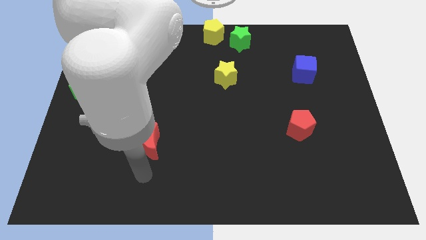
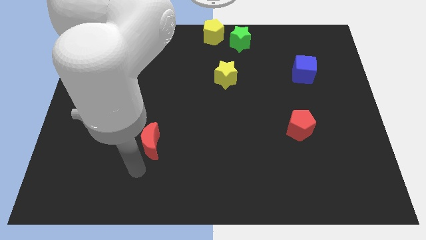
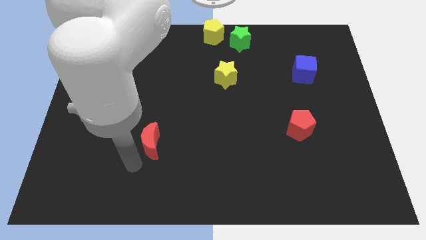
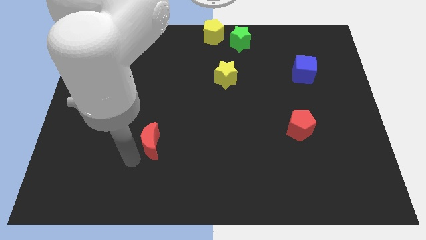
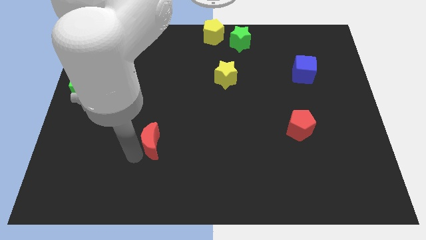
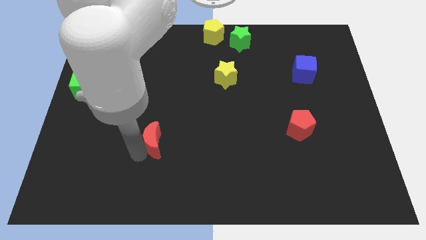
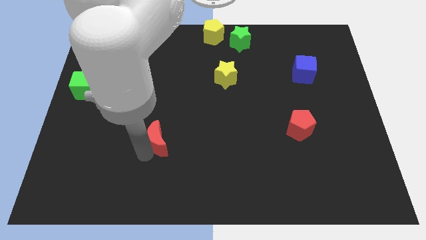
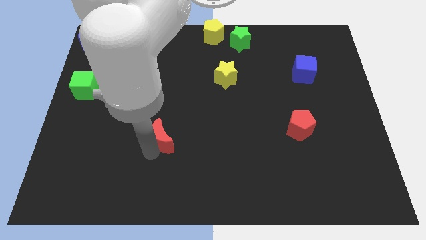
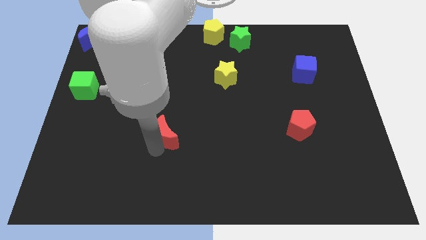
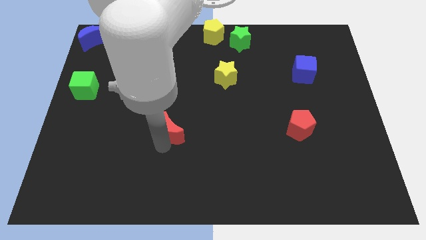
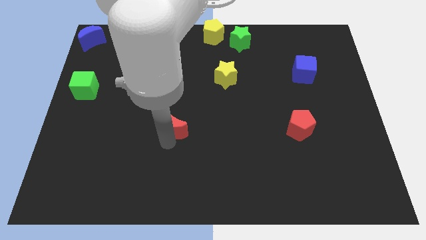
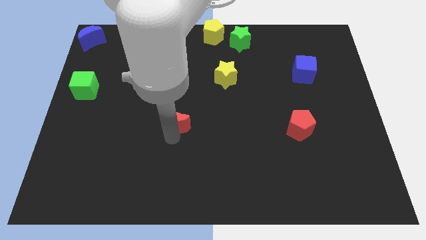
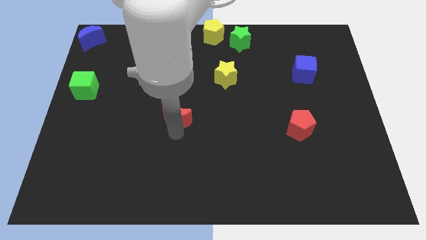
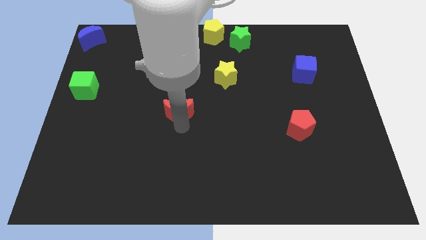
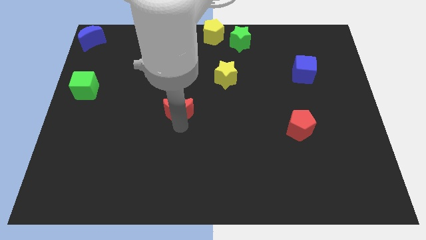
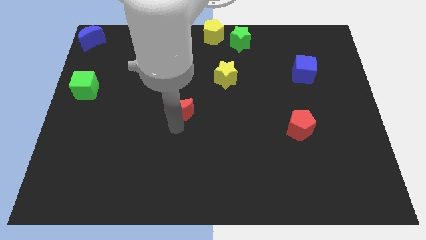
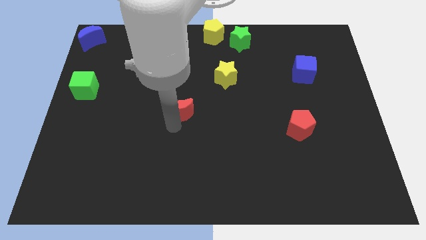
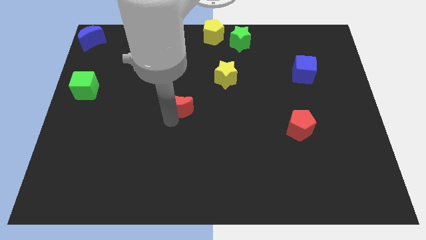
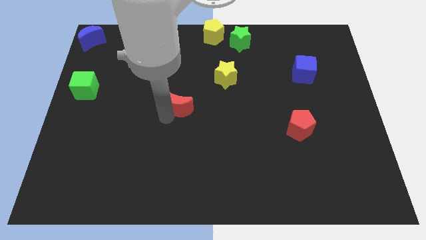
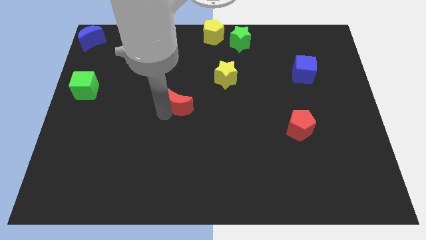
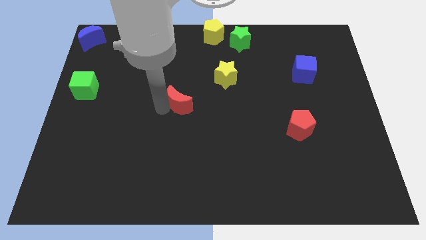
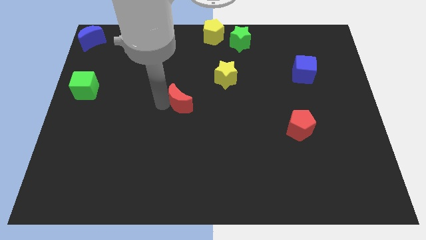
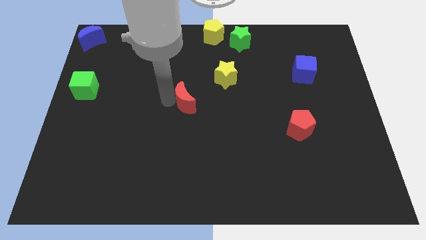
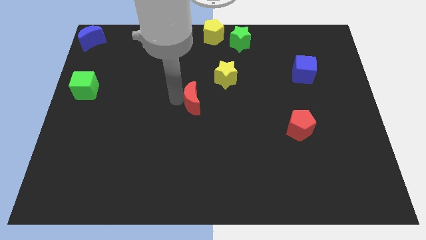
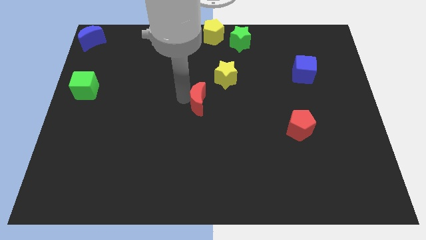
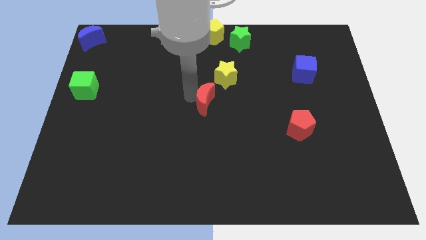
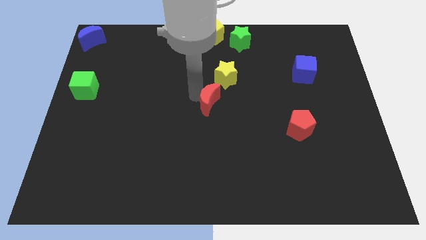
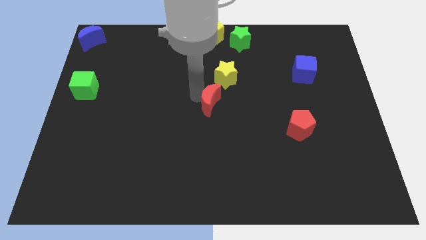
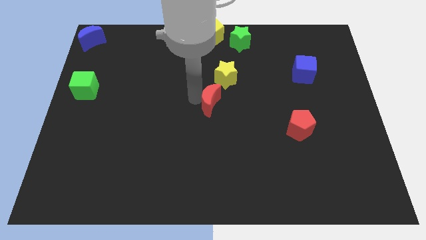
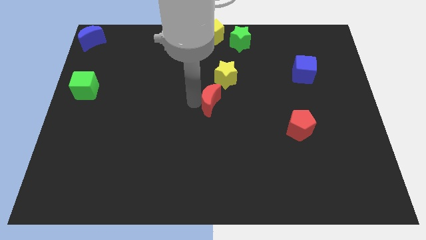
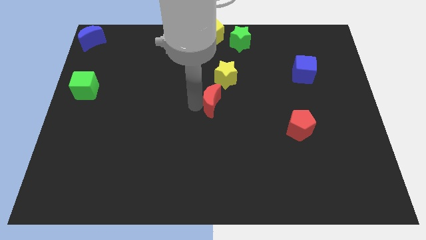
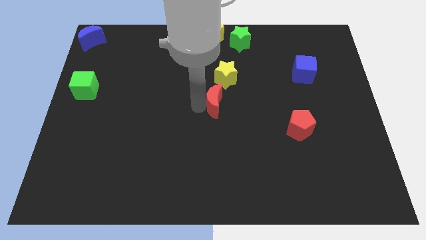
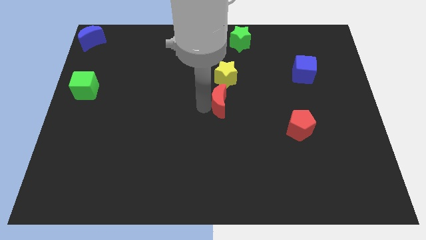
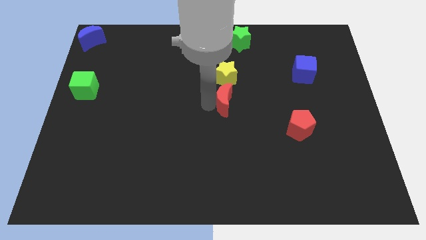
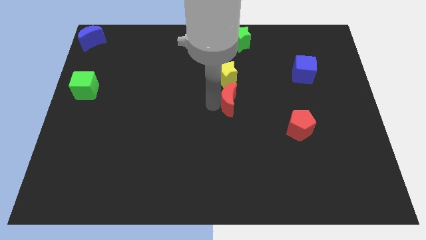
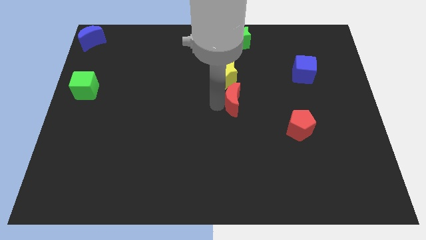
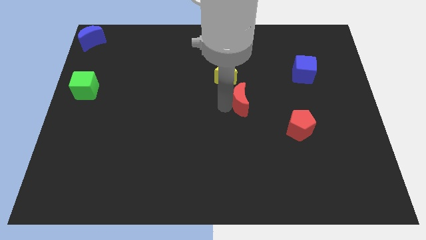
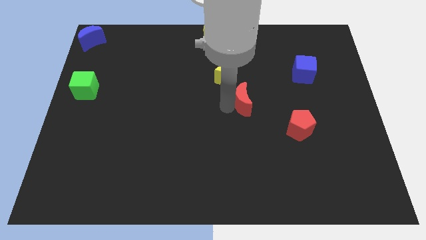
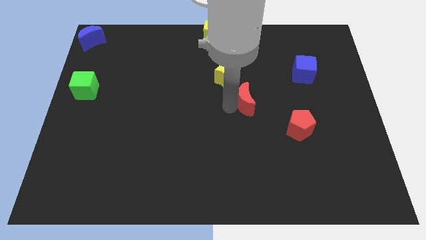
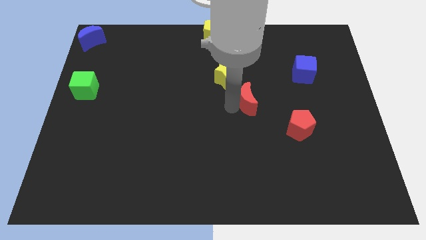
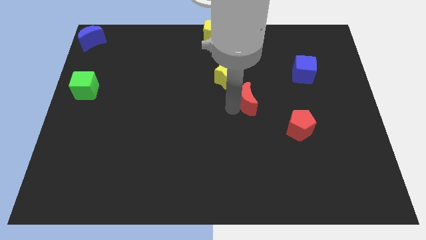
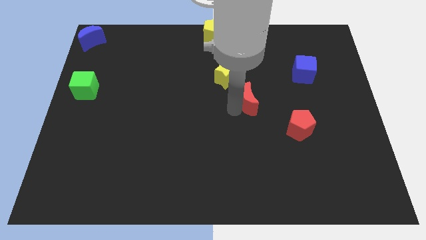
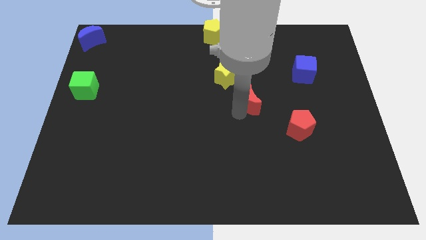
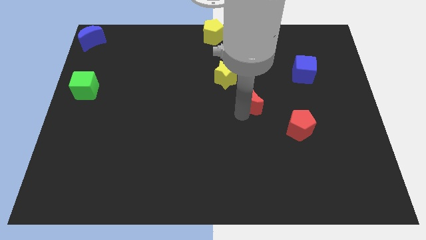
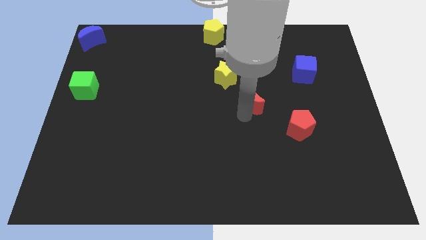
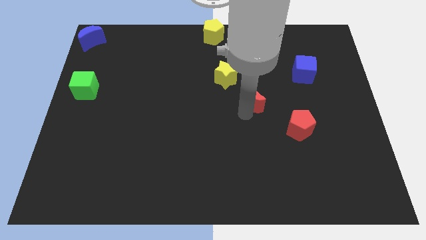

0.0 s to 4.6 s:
place the red moon in between the red pentagon and yellow star

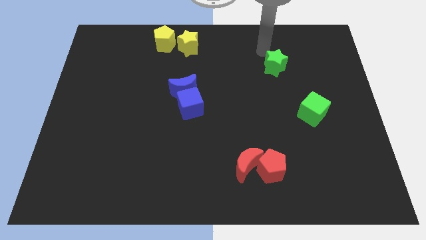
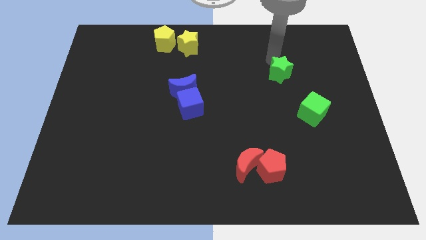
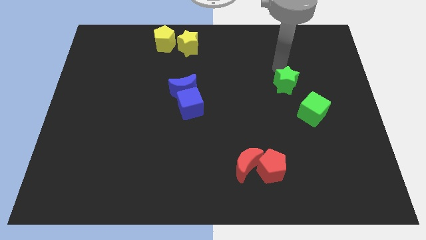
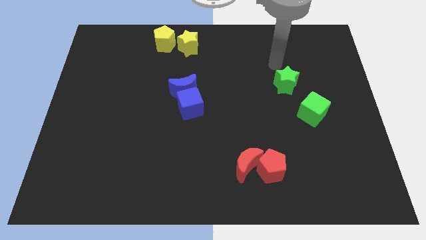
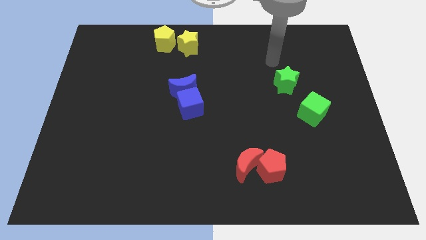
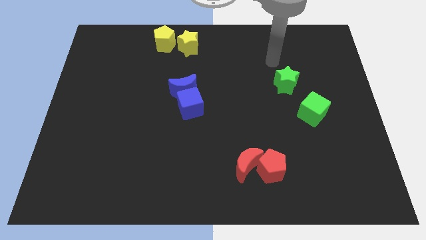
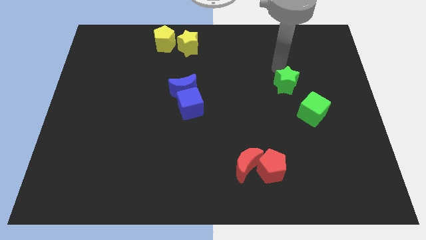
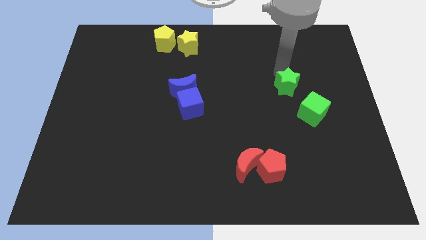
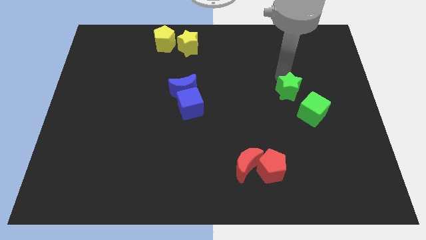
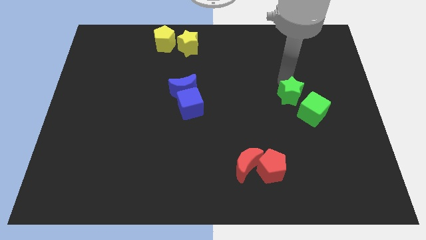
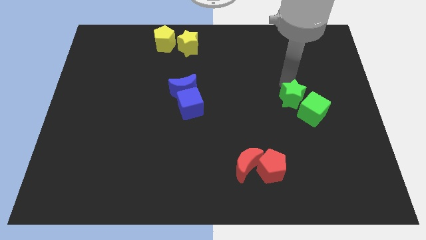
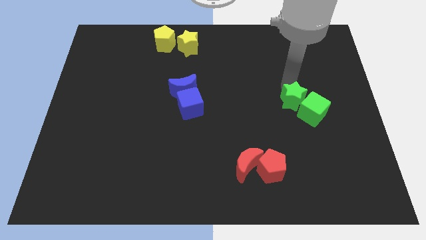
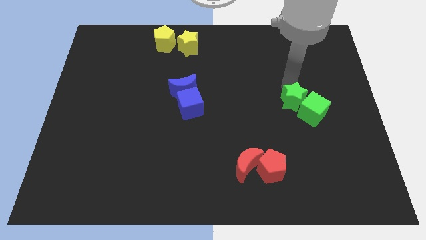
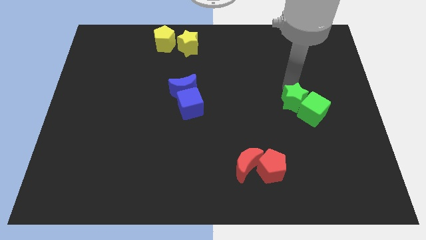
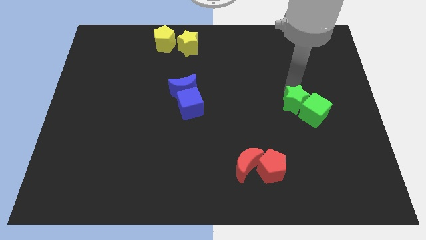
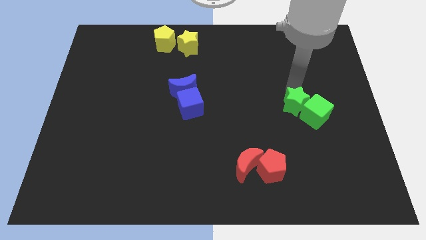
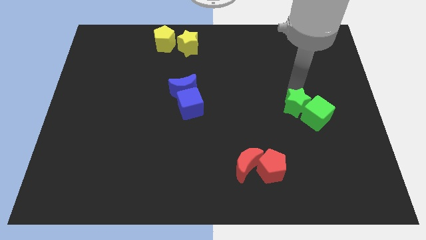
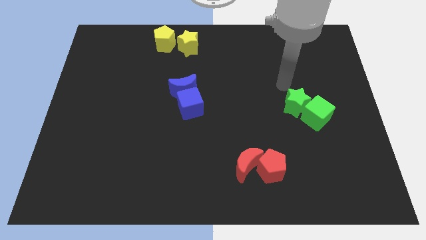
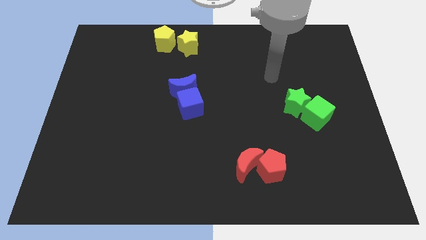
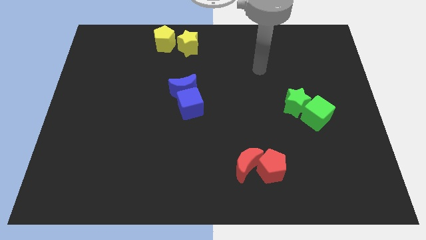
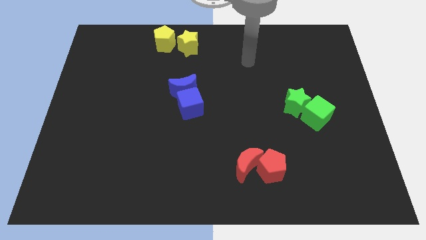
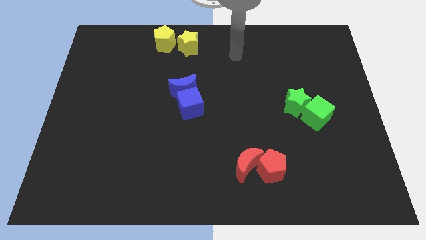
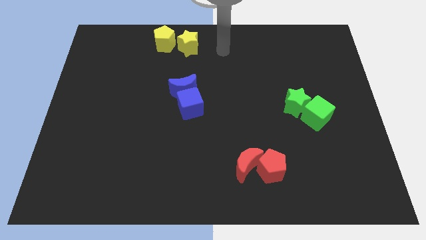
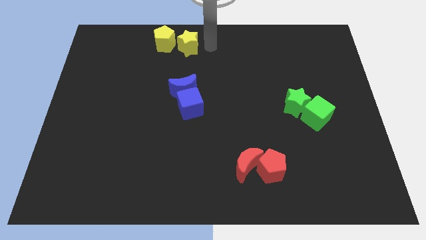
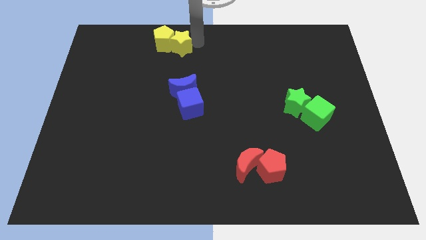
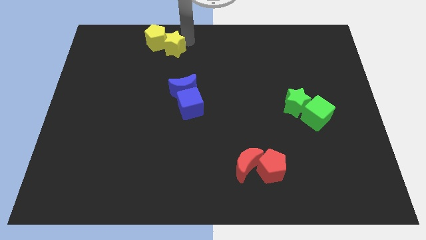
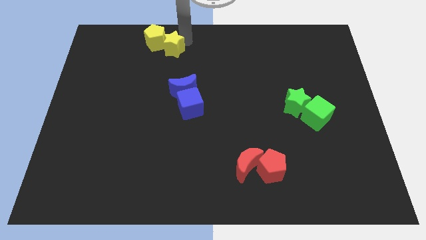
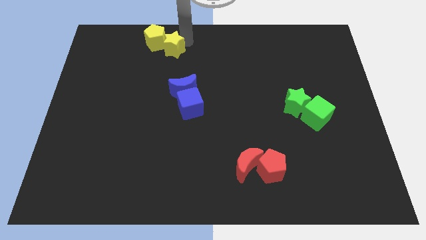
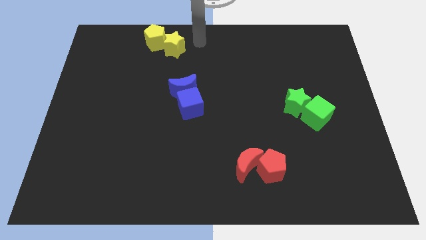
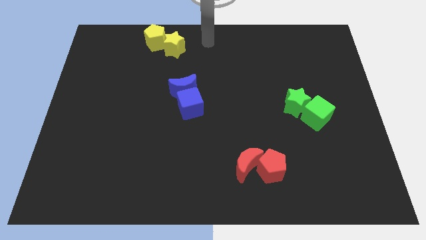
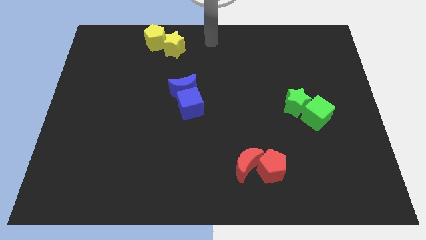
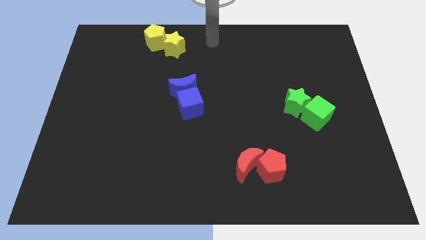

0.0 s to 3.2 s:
move the green star above to the green cube

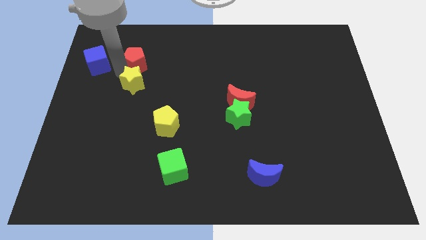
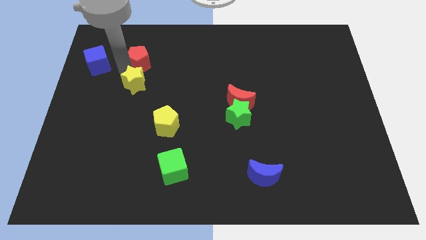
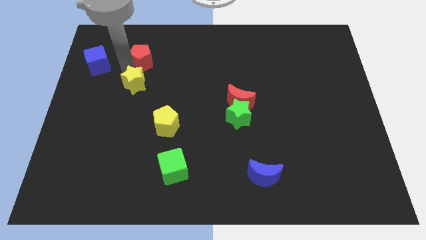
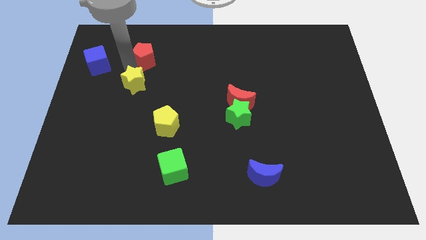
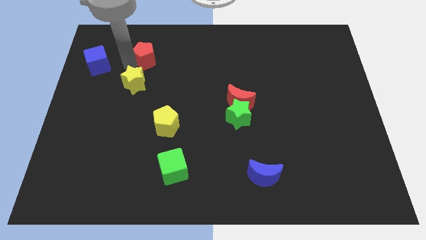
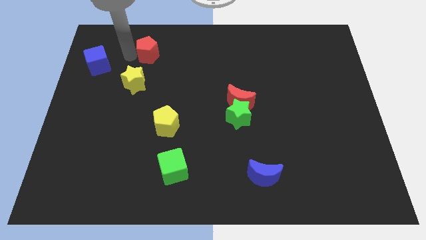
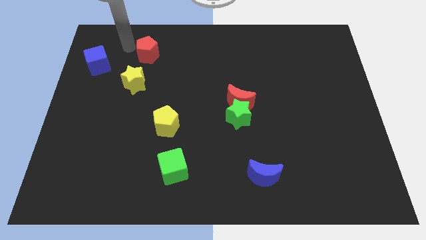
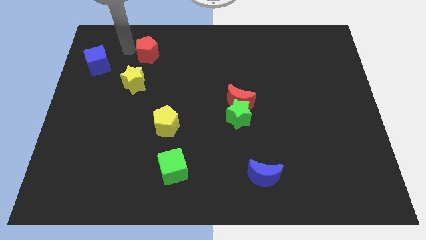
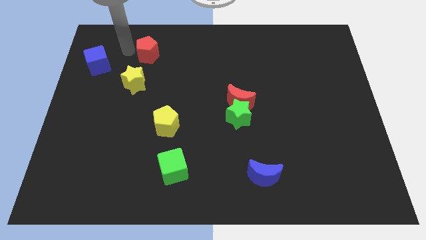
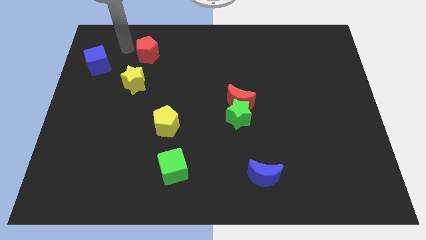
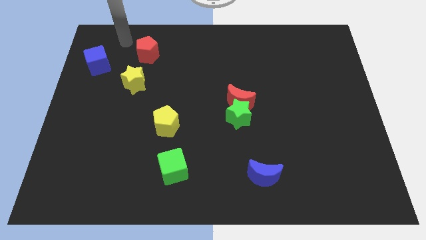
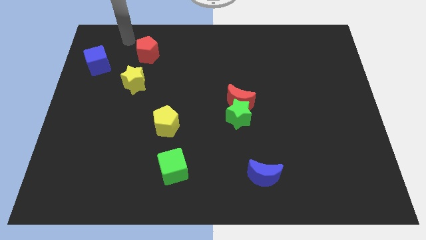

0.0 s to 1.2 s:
separate the red pentagon and yellow star
